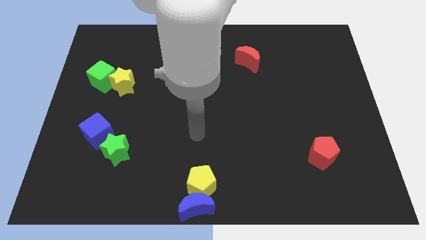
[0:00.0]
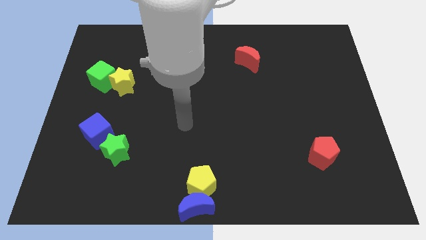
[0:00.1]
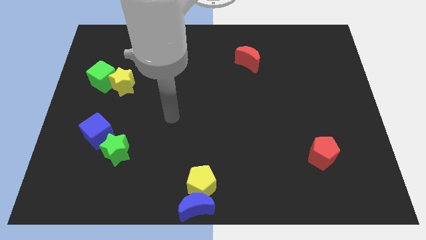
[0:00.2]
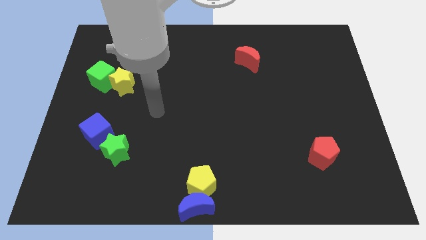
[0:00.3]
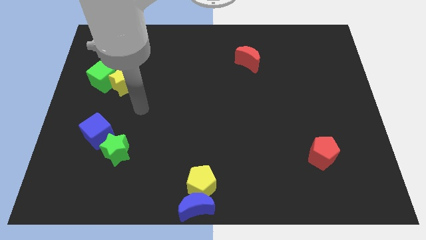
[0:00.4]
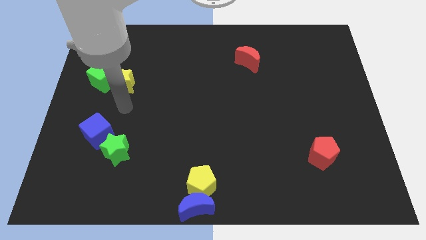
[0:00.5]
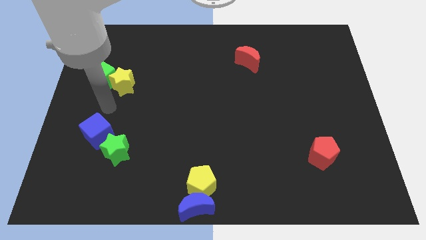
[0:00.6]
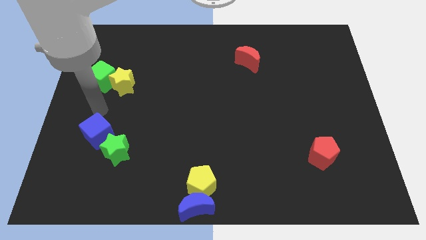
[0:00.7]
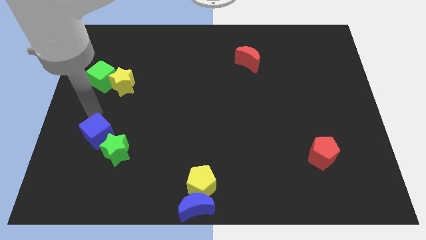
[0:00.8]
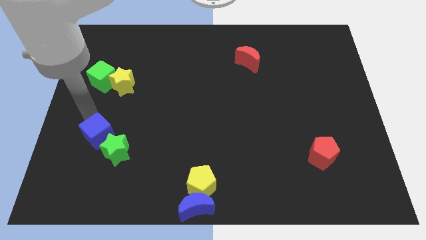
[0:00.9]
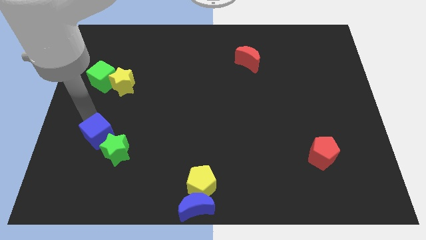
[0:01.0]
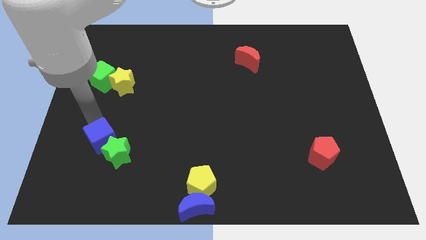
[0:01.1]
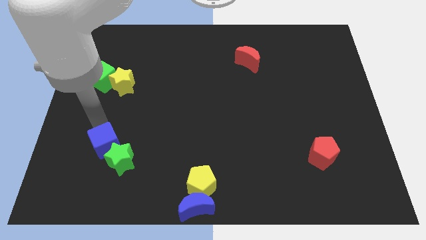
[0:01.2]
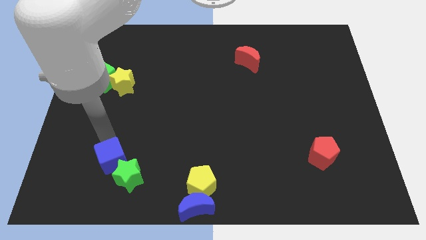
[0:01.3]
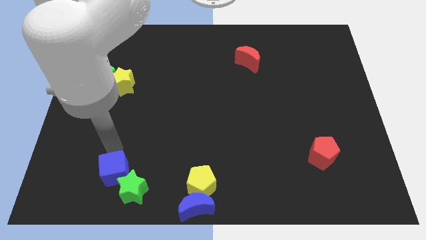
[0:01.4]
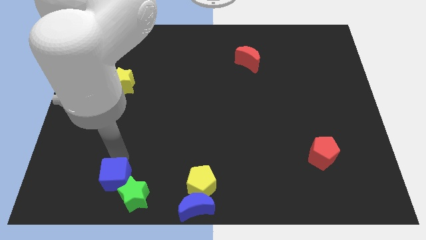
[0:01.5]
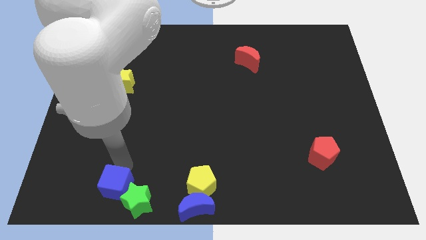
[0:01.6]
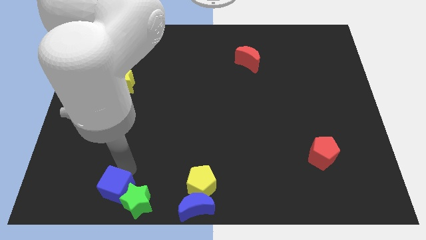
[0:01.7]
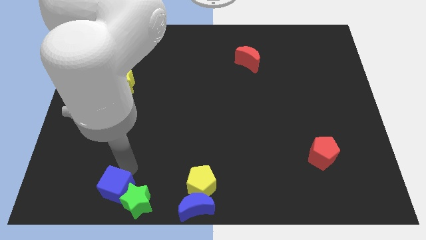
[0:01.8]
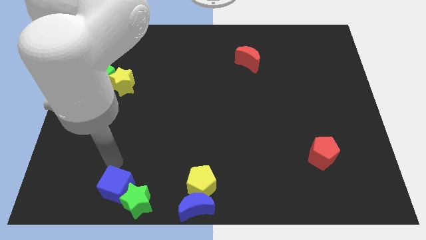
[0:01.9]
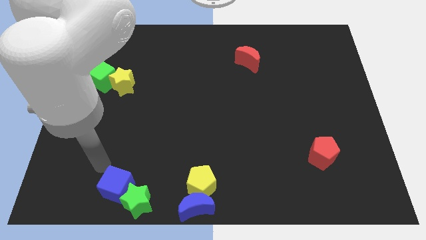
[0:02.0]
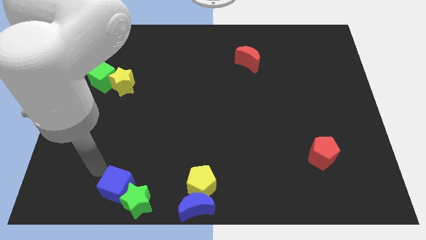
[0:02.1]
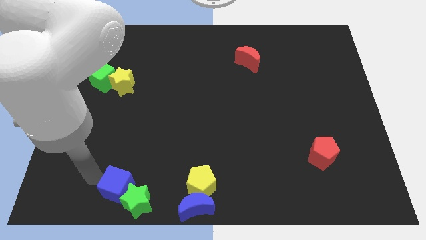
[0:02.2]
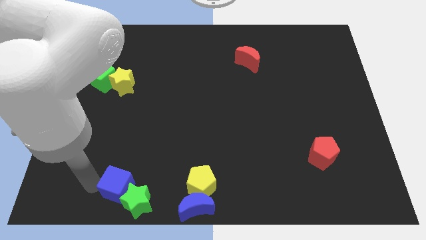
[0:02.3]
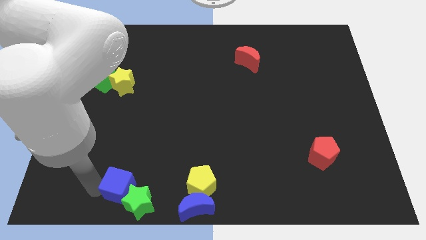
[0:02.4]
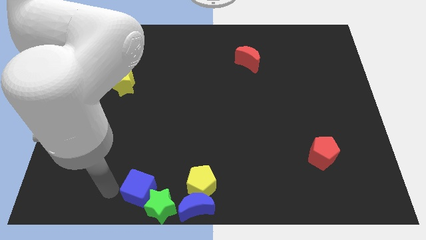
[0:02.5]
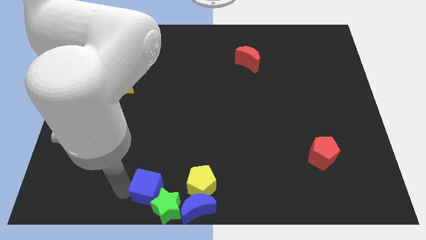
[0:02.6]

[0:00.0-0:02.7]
move green star and blue cube left beside the yellow pentagon and blue moon

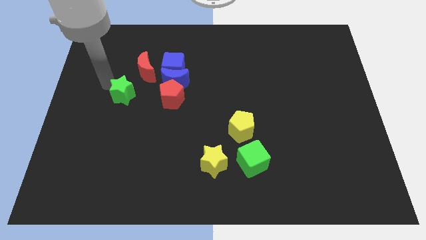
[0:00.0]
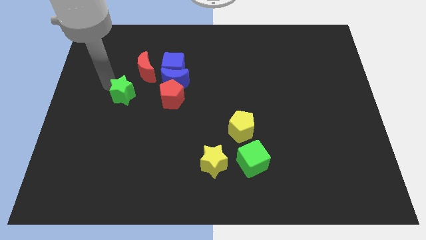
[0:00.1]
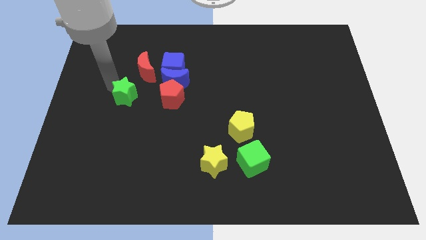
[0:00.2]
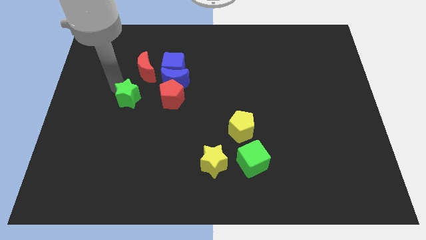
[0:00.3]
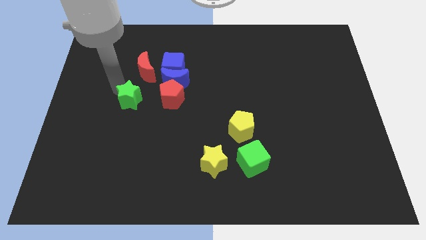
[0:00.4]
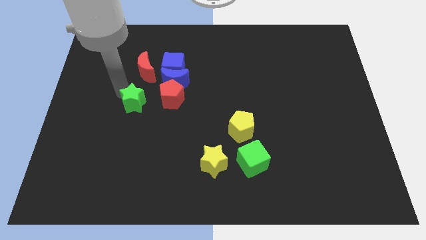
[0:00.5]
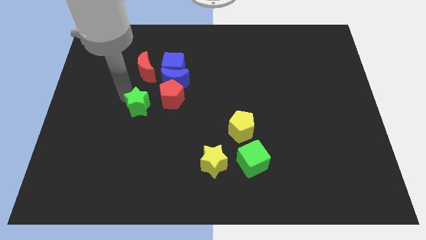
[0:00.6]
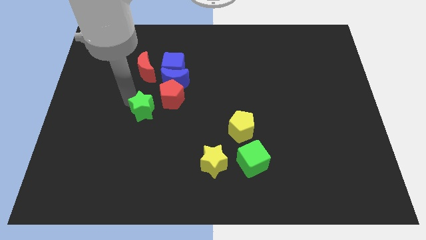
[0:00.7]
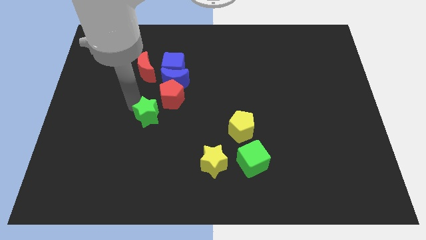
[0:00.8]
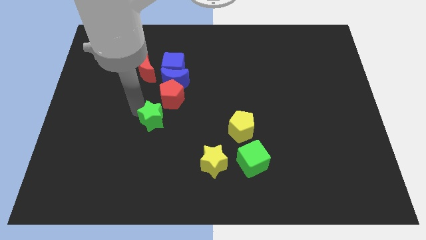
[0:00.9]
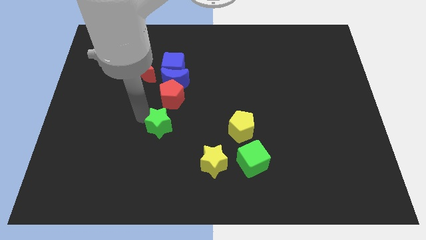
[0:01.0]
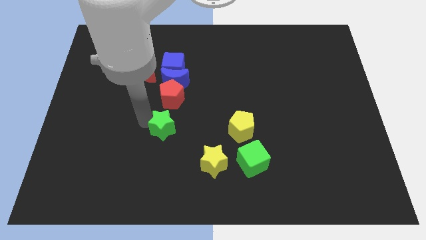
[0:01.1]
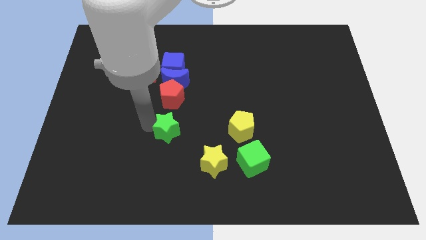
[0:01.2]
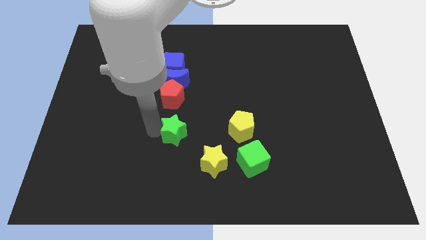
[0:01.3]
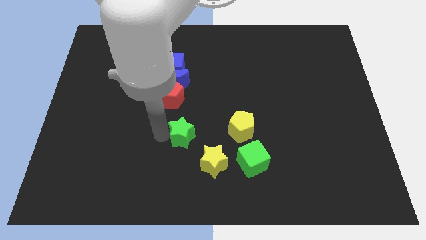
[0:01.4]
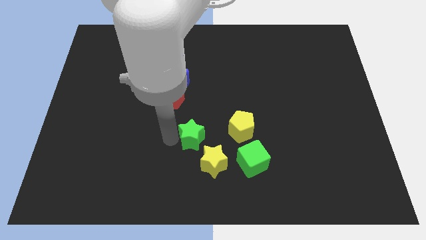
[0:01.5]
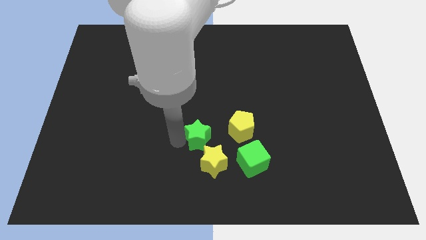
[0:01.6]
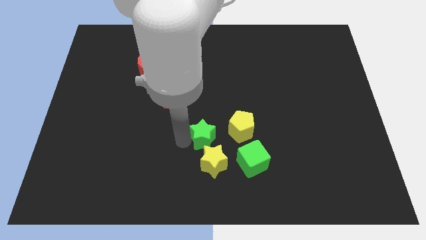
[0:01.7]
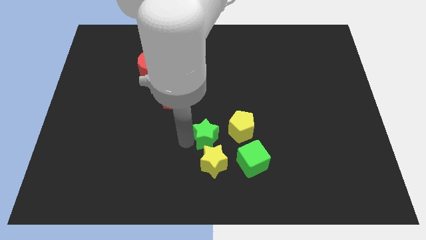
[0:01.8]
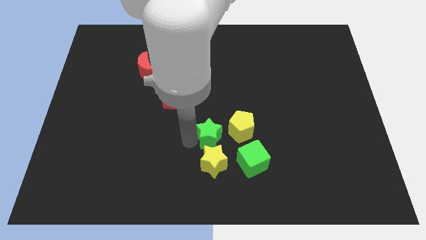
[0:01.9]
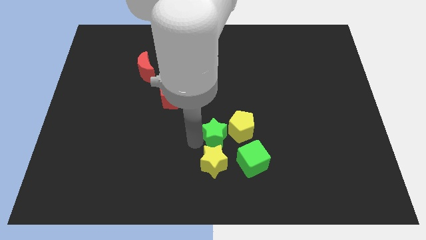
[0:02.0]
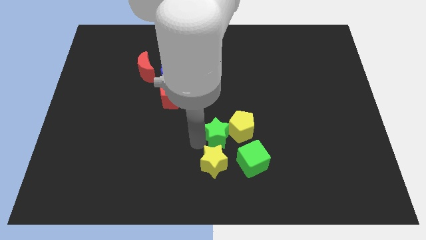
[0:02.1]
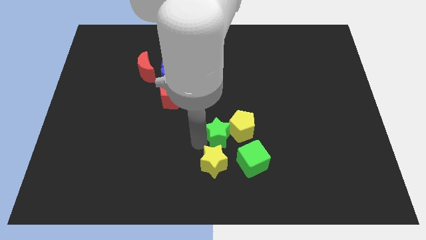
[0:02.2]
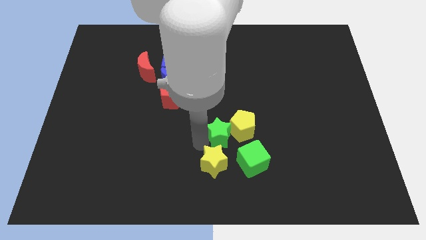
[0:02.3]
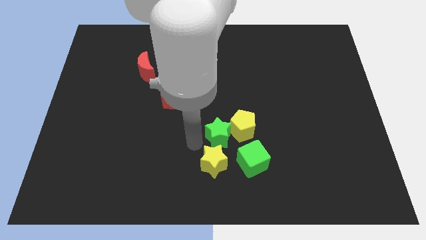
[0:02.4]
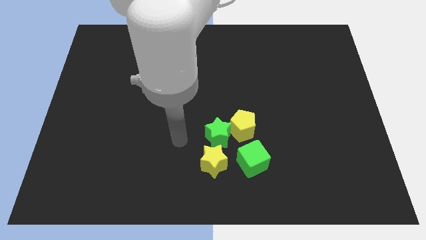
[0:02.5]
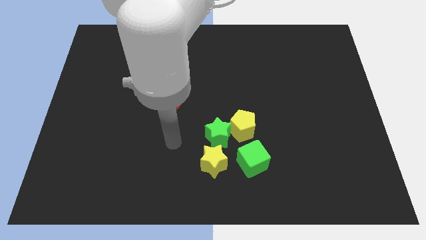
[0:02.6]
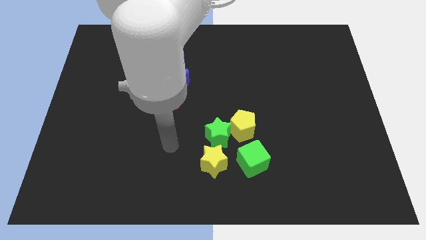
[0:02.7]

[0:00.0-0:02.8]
move green star close to yellow pentagon

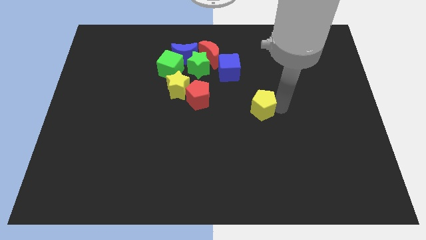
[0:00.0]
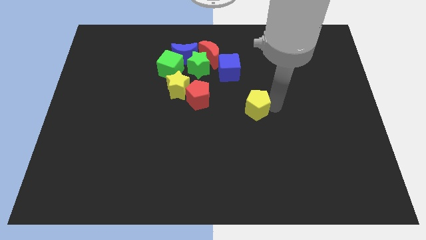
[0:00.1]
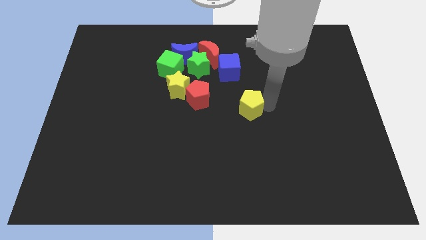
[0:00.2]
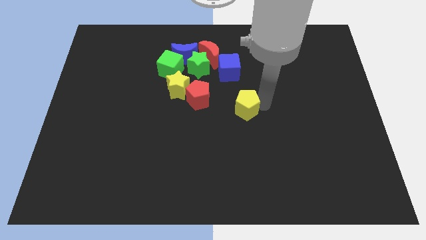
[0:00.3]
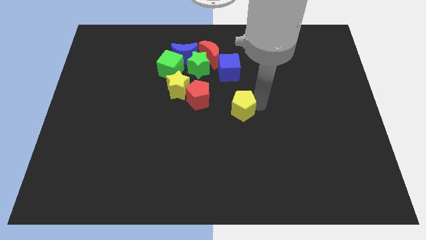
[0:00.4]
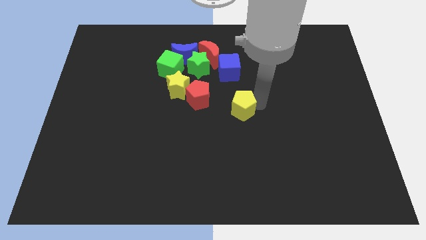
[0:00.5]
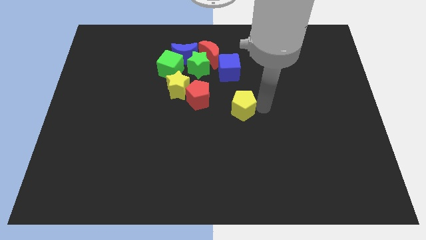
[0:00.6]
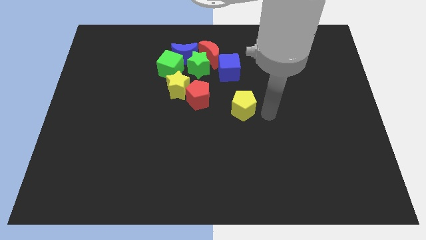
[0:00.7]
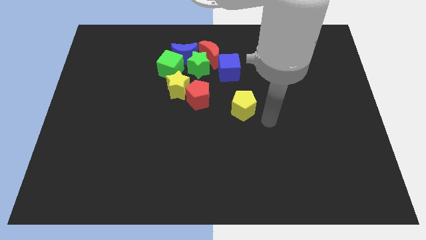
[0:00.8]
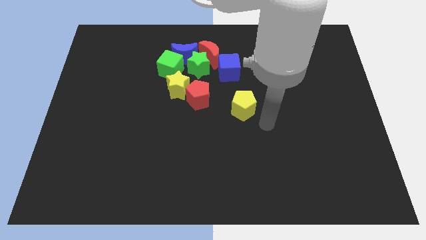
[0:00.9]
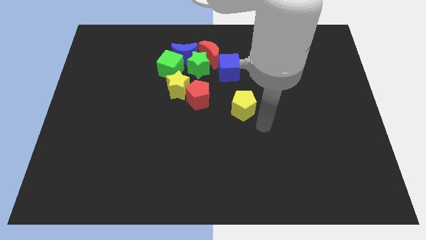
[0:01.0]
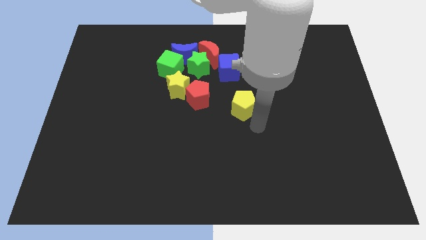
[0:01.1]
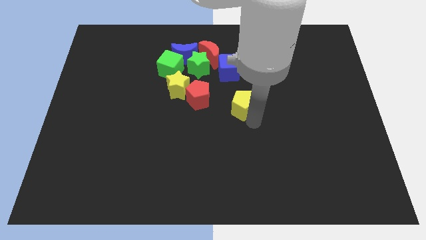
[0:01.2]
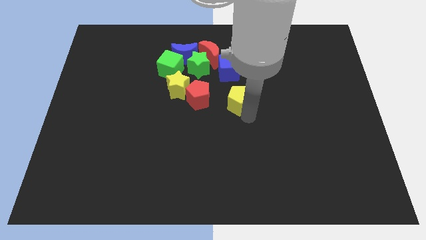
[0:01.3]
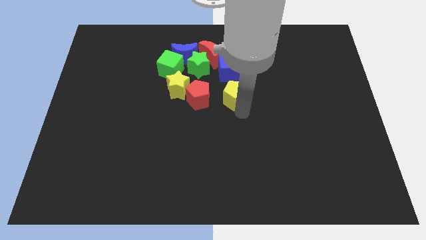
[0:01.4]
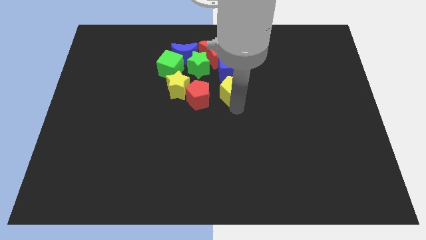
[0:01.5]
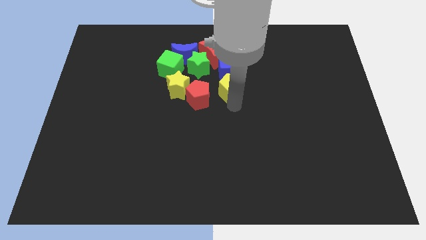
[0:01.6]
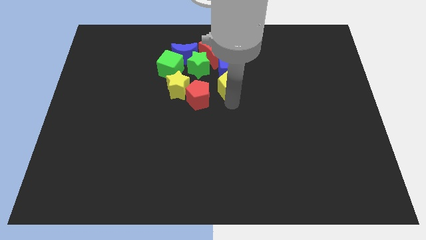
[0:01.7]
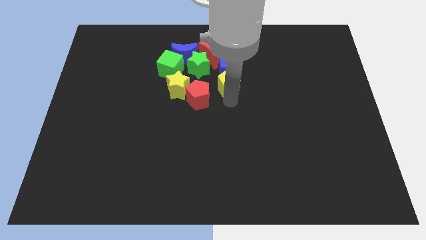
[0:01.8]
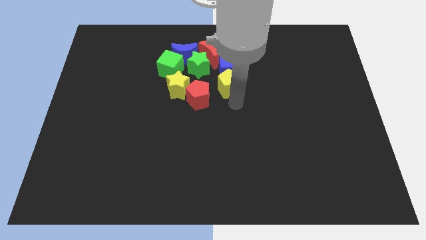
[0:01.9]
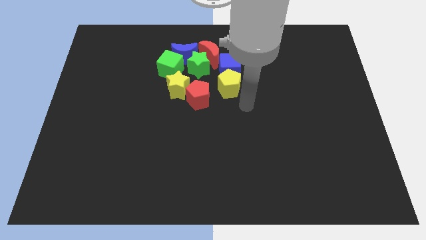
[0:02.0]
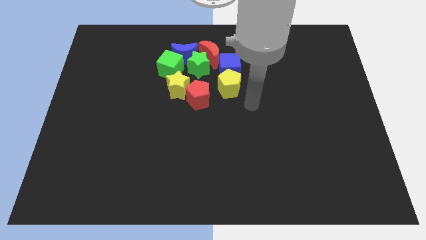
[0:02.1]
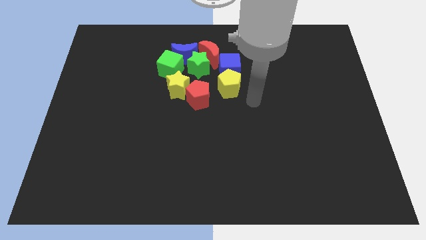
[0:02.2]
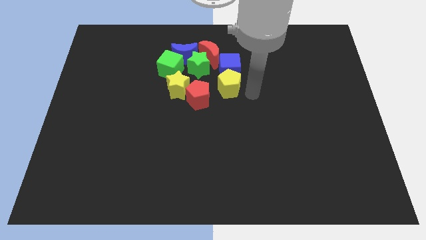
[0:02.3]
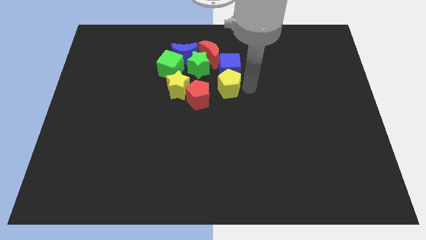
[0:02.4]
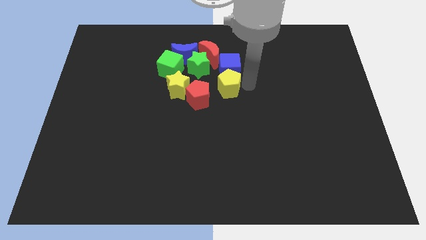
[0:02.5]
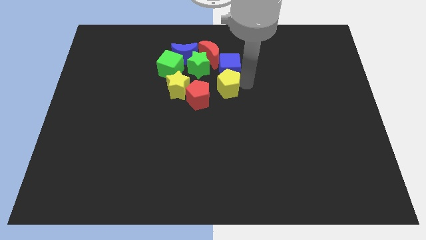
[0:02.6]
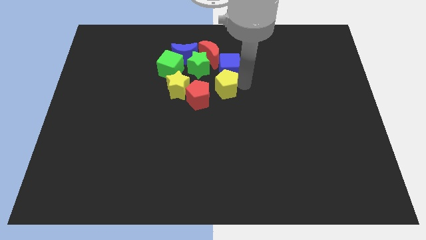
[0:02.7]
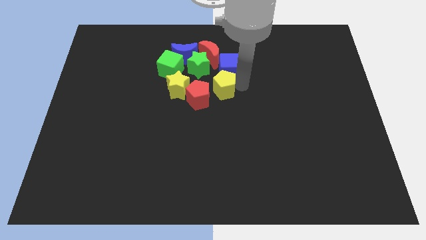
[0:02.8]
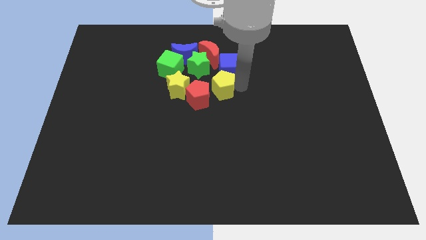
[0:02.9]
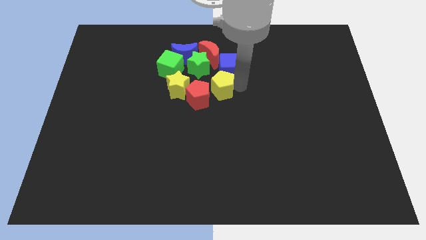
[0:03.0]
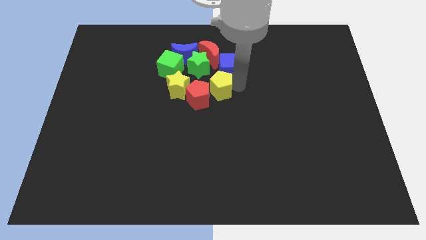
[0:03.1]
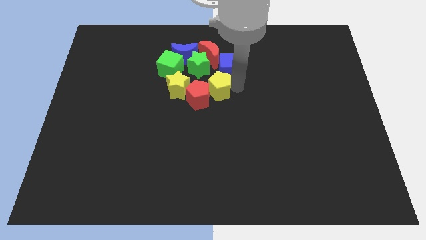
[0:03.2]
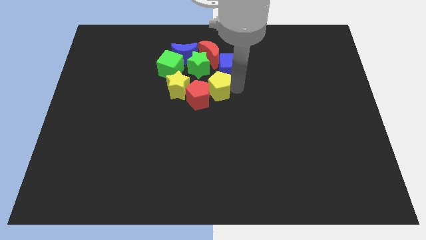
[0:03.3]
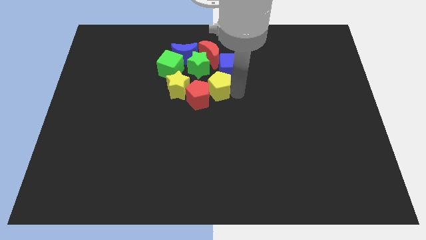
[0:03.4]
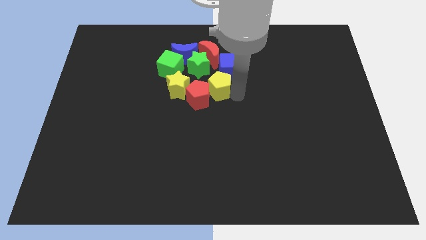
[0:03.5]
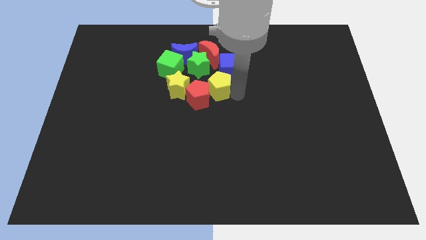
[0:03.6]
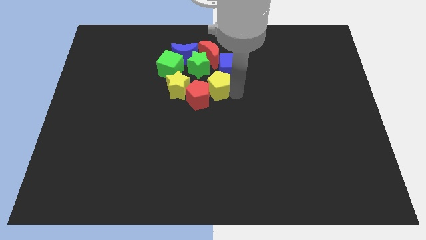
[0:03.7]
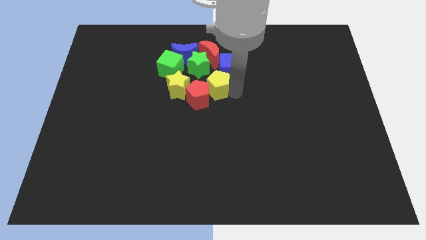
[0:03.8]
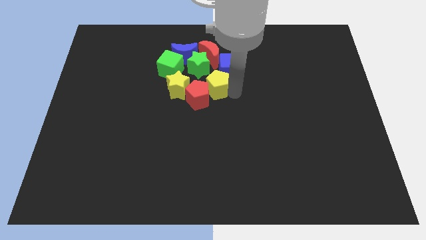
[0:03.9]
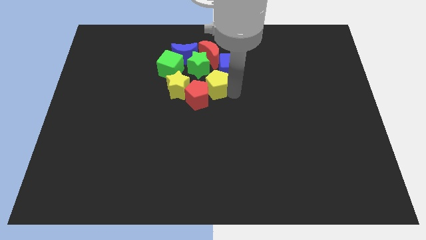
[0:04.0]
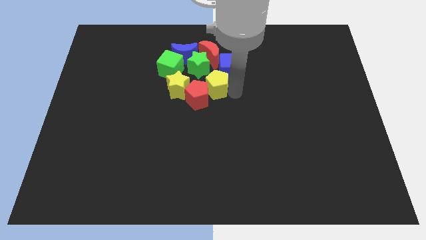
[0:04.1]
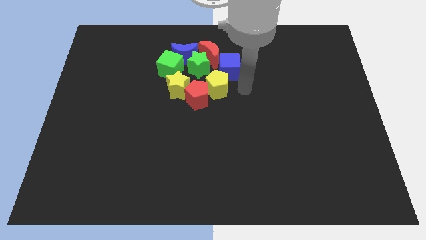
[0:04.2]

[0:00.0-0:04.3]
place the yellow pentagon at the top right side of red pentagon
